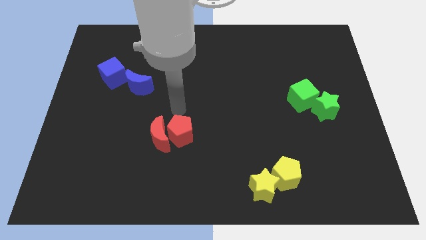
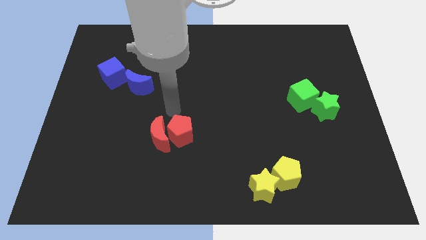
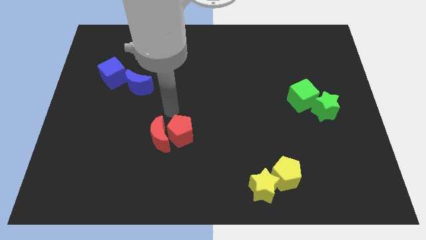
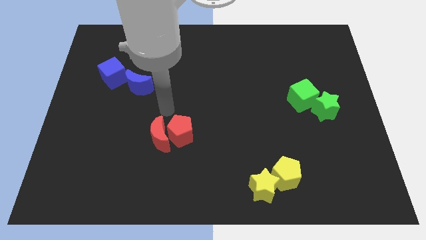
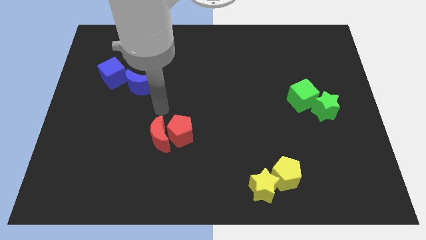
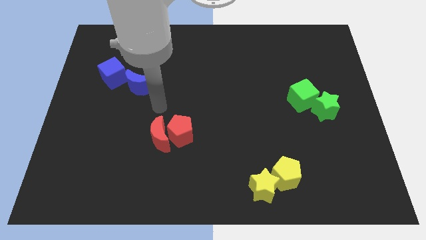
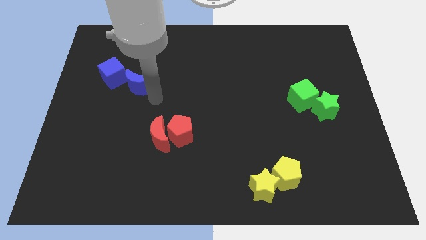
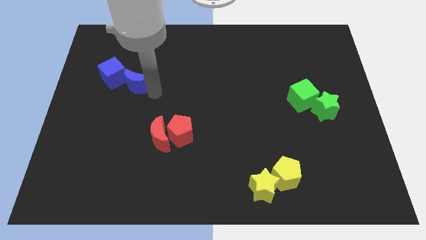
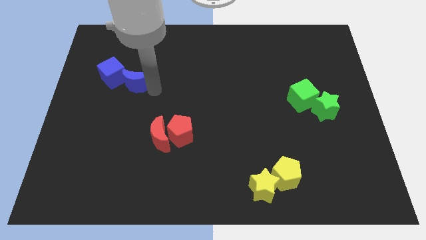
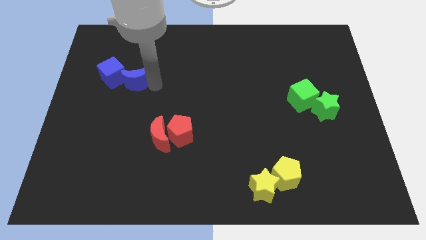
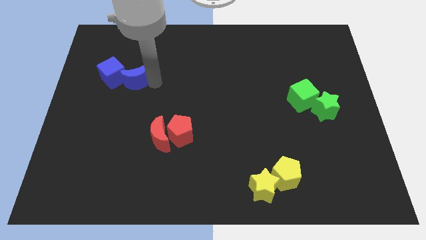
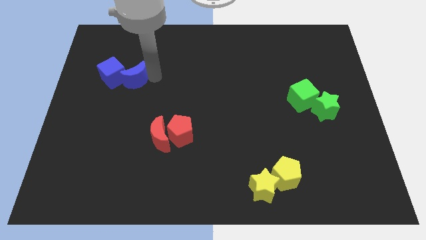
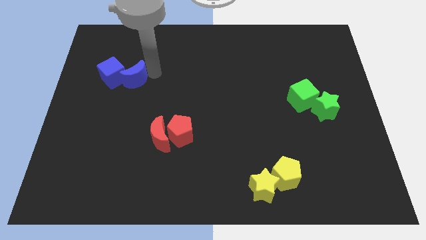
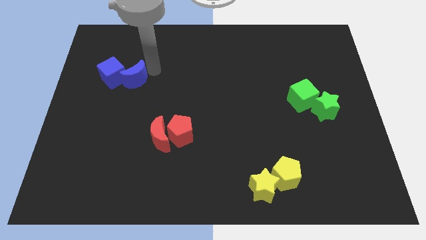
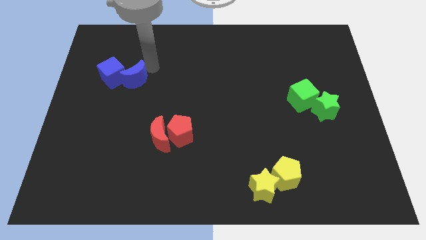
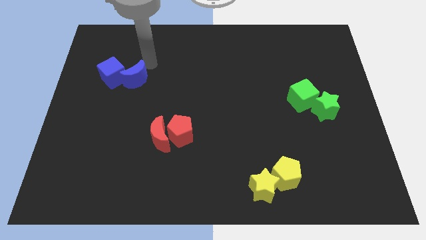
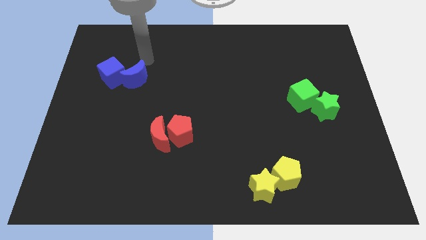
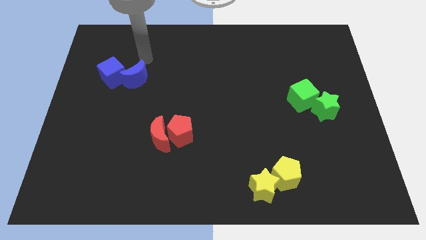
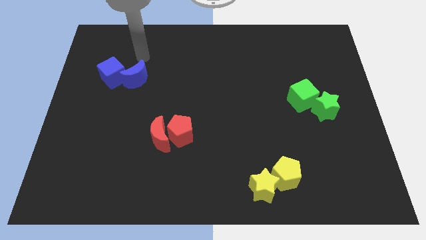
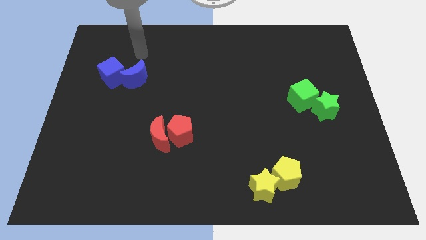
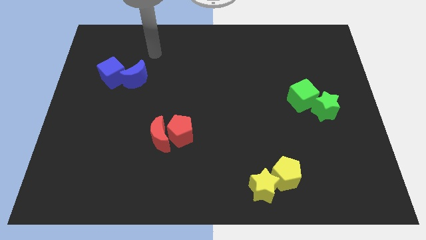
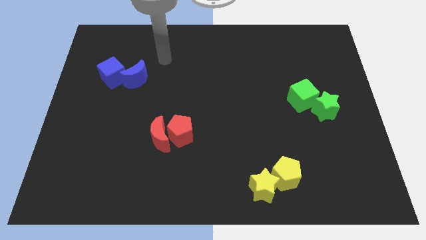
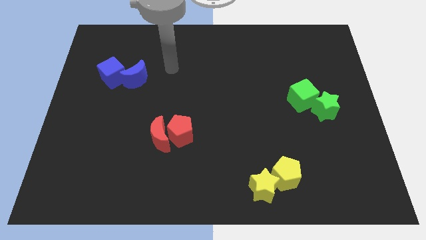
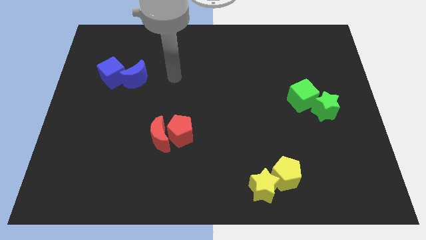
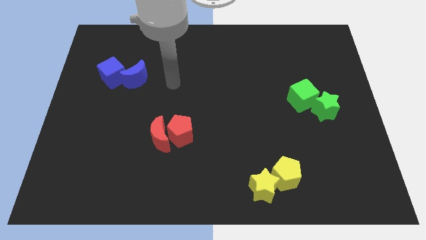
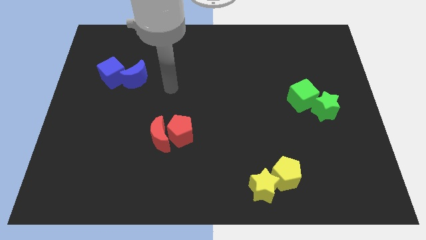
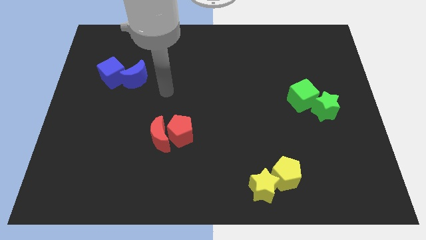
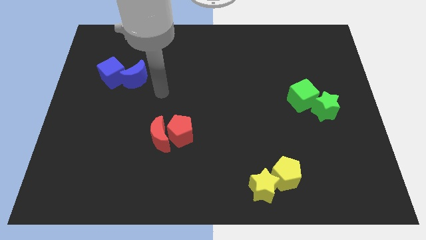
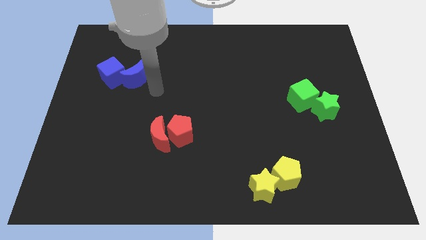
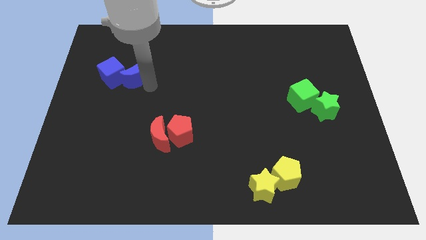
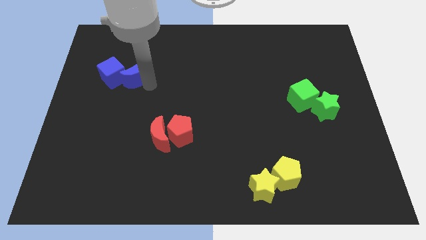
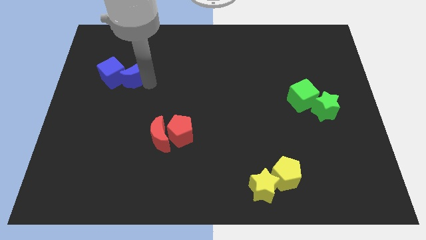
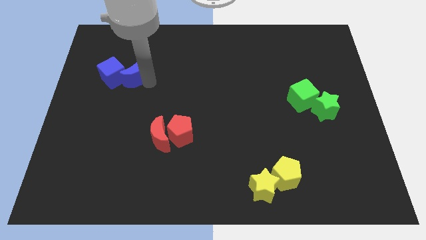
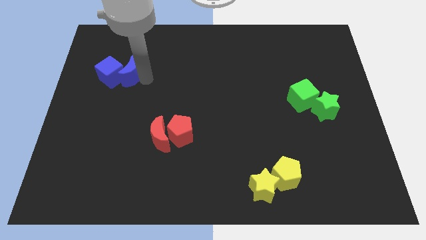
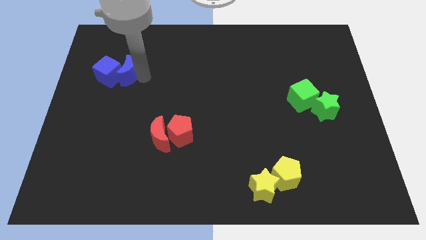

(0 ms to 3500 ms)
move the blue cube with the blue moon

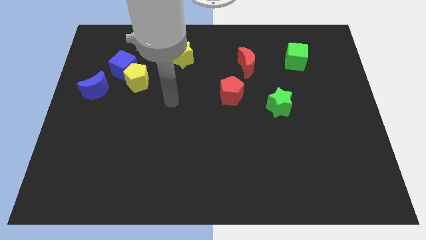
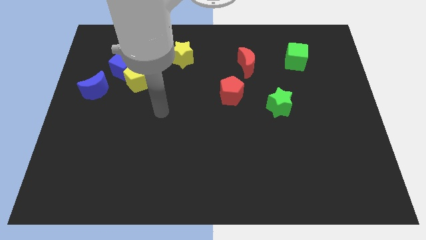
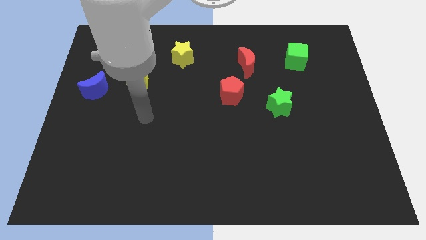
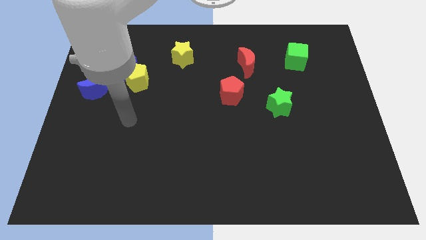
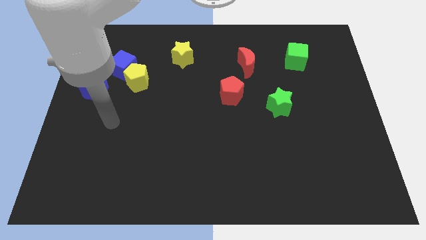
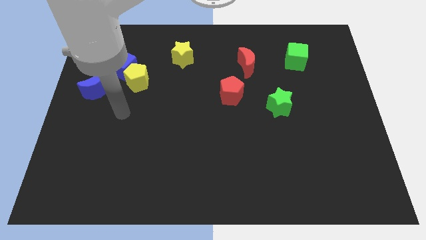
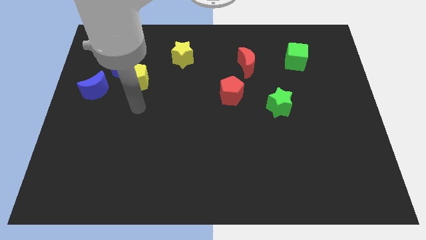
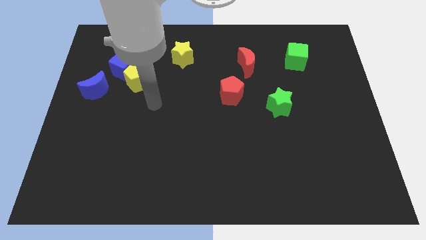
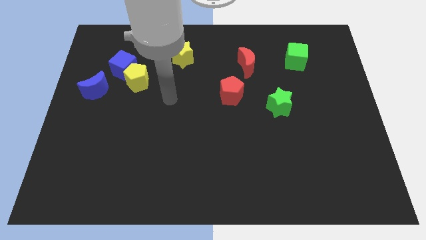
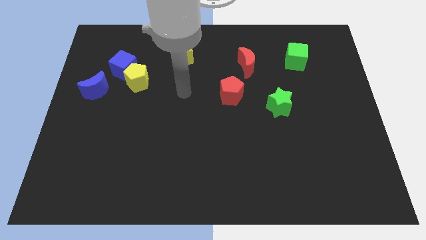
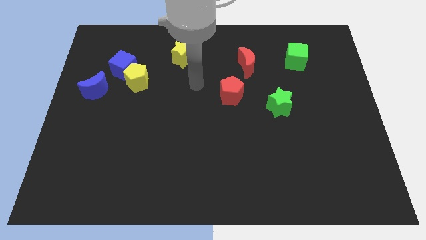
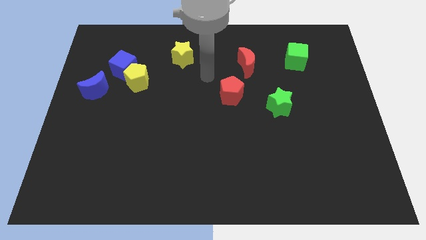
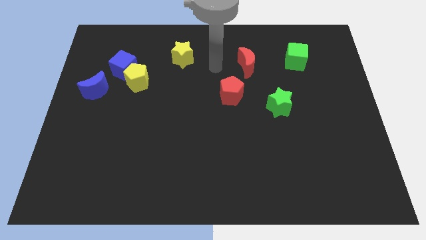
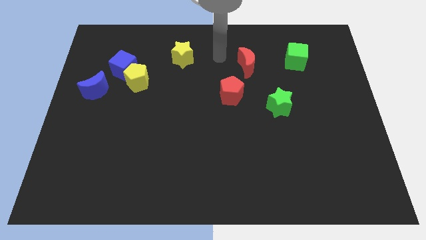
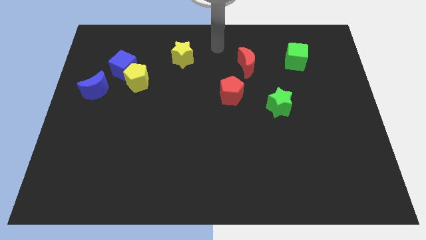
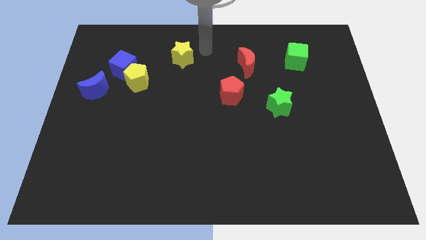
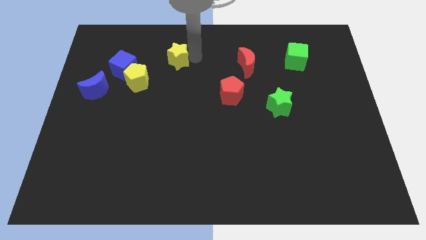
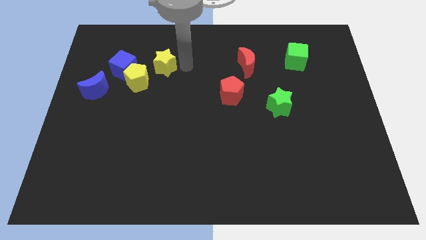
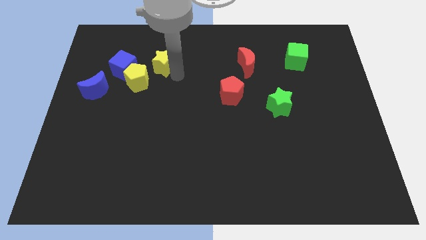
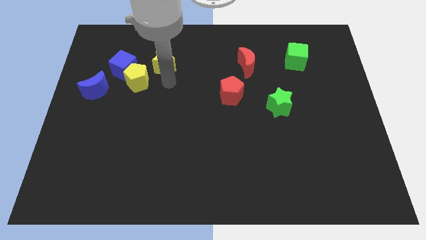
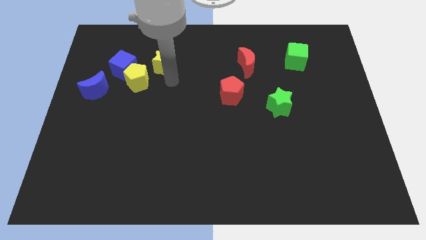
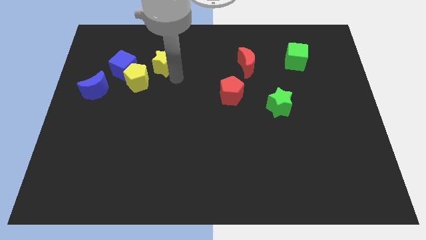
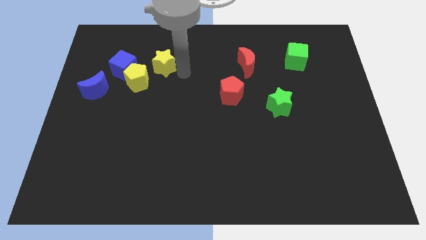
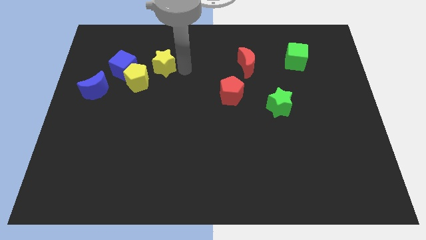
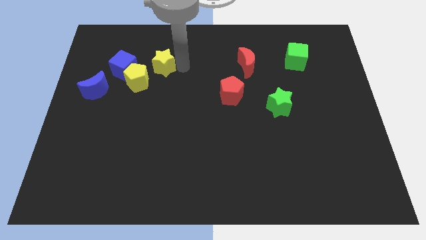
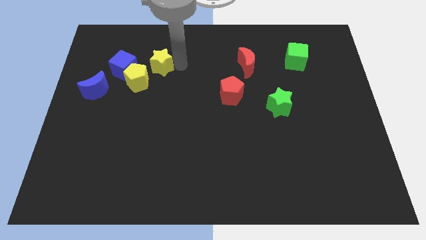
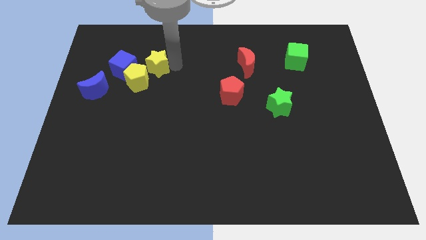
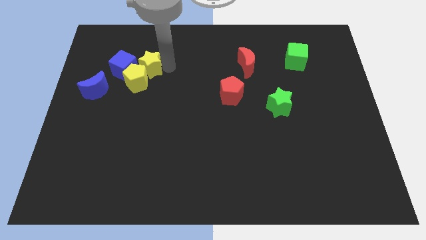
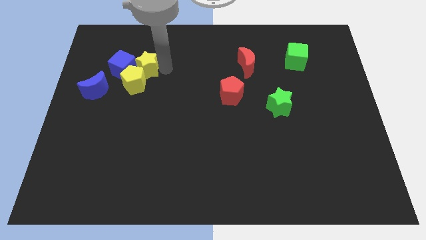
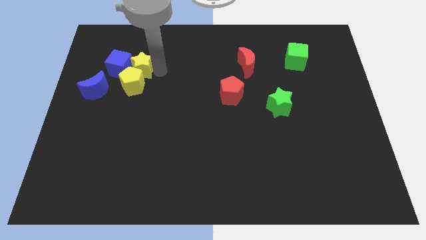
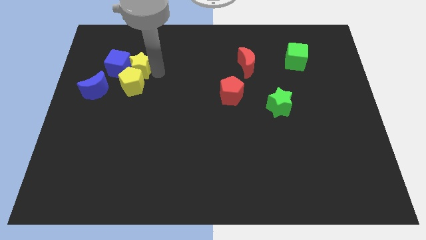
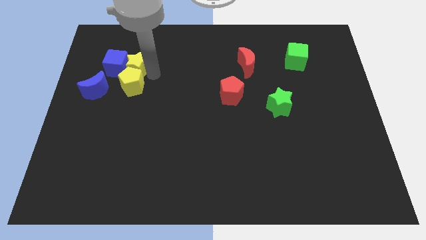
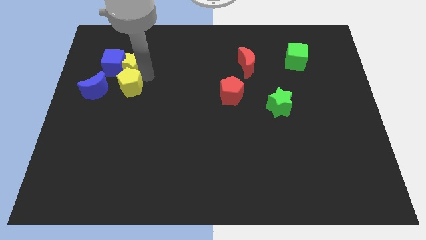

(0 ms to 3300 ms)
push the yellow star into the blue cube

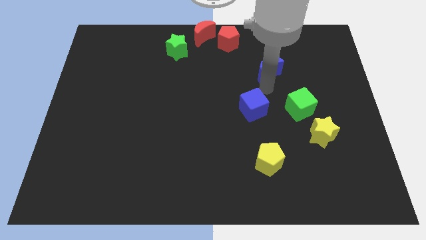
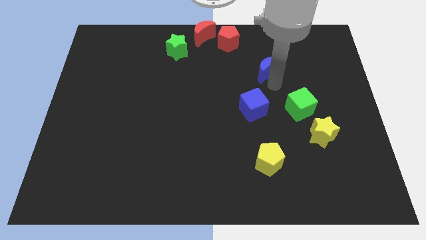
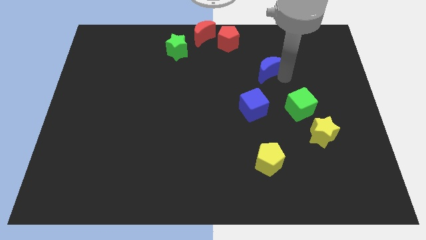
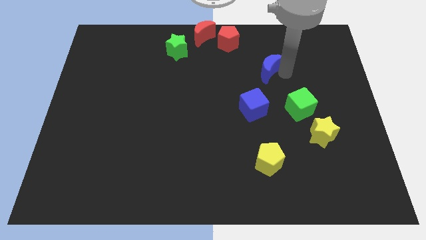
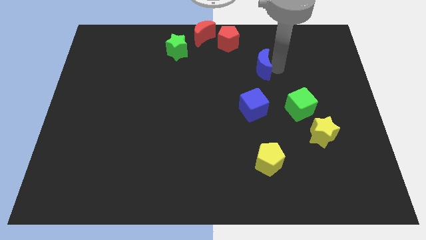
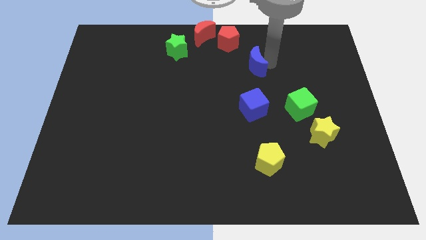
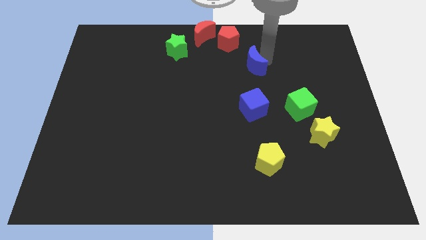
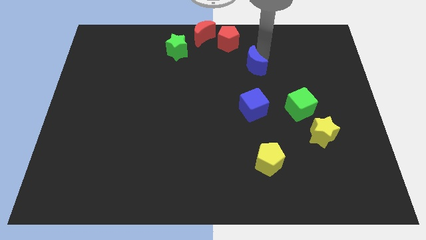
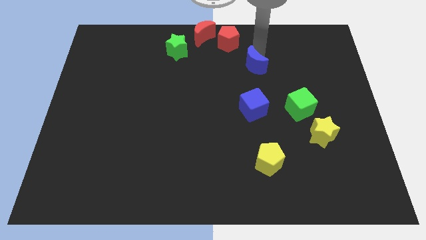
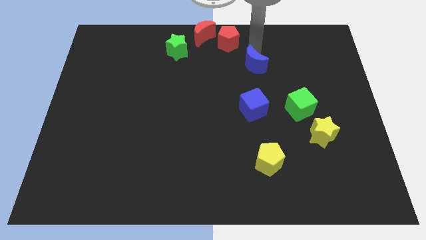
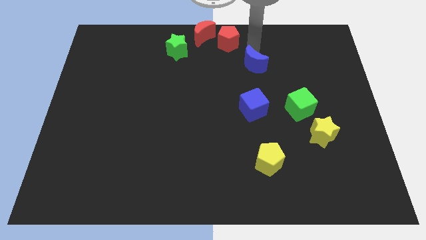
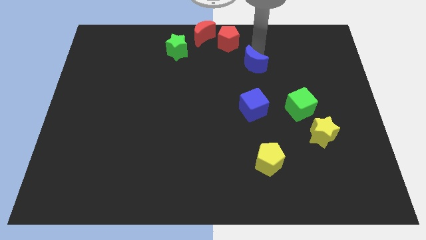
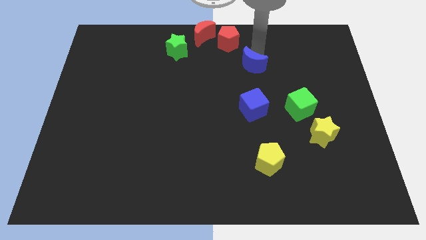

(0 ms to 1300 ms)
push blue moon towards top center

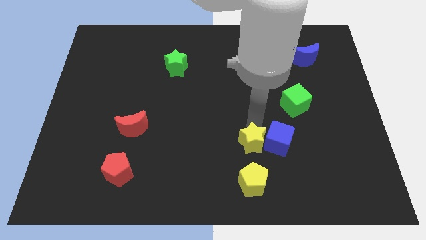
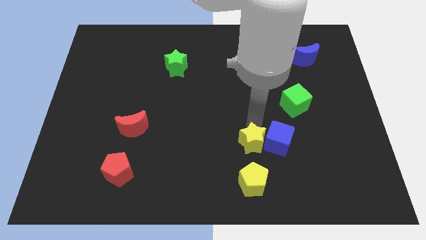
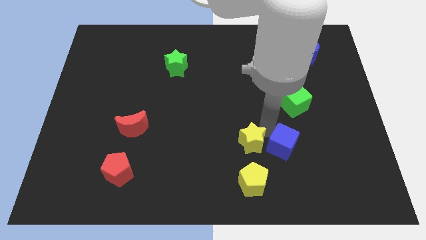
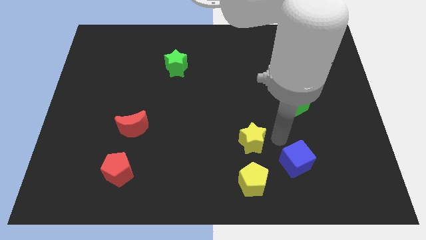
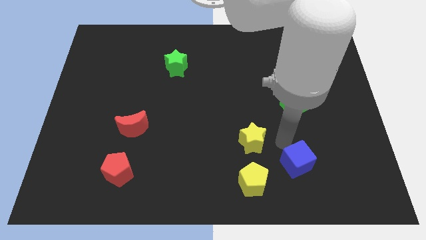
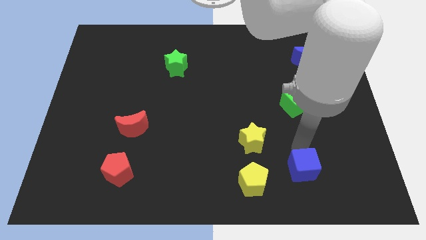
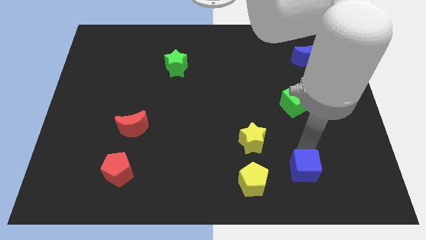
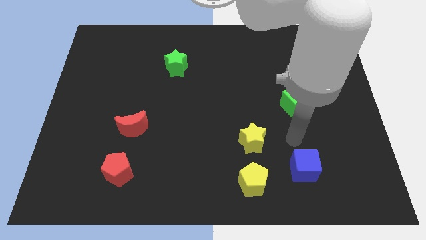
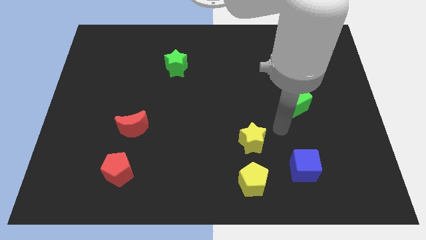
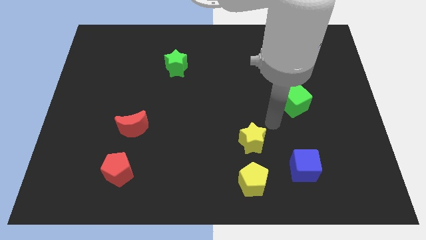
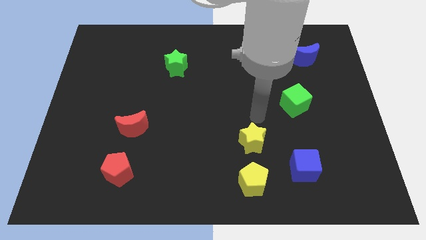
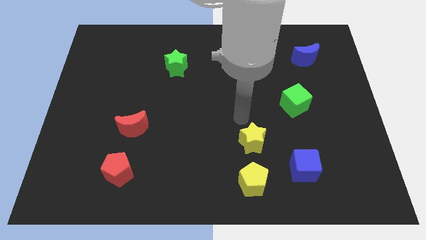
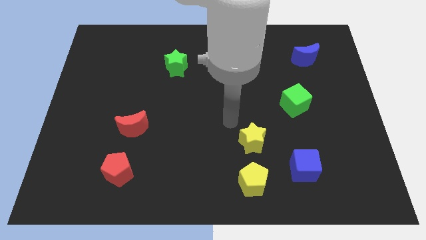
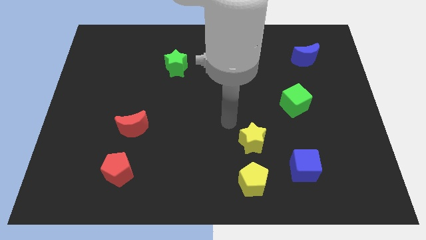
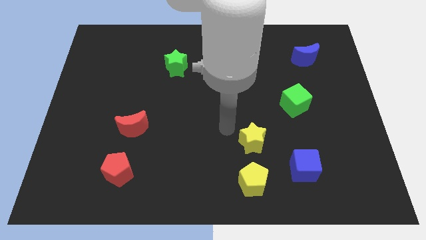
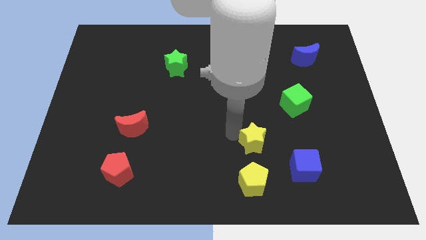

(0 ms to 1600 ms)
place blue cube to the right of yellow pentagon
